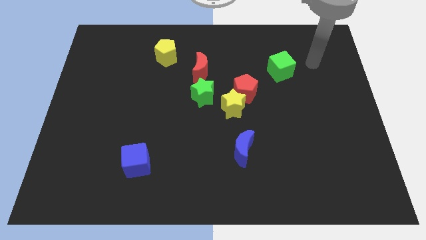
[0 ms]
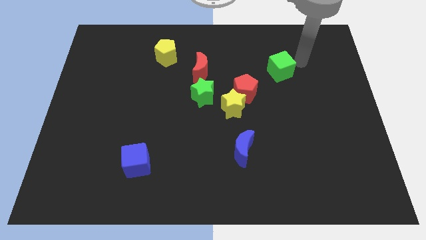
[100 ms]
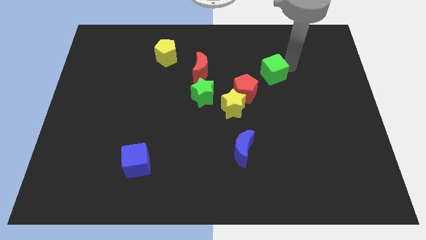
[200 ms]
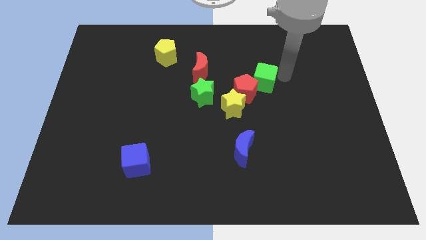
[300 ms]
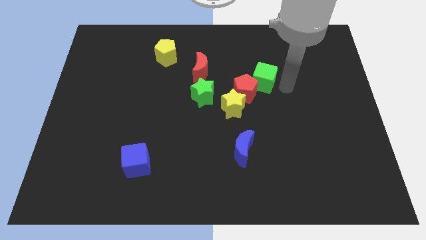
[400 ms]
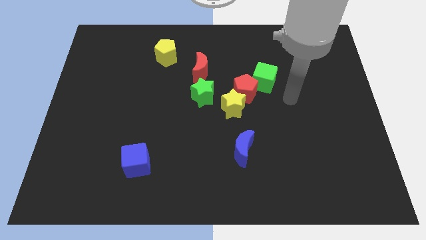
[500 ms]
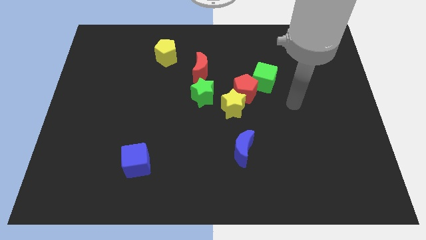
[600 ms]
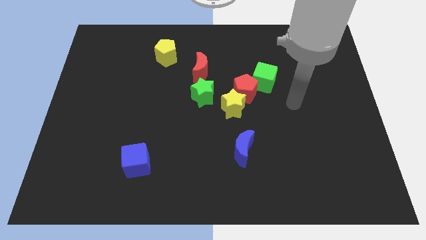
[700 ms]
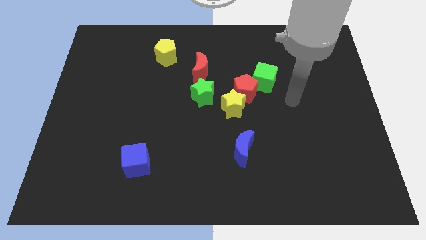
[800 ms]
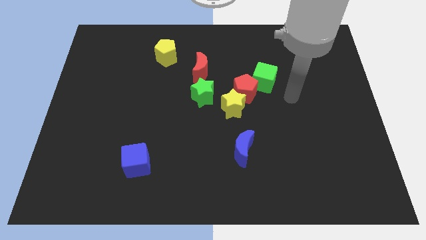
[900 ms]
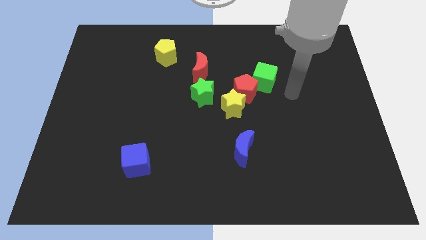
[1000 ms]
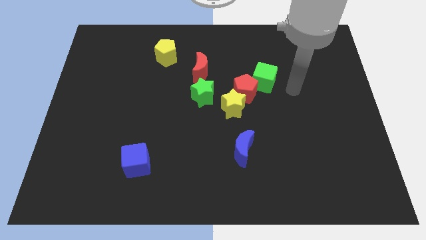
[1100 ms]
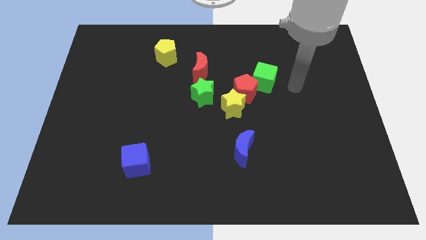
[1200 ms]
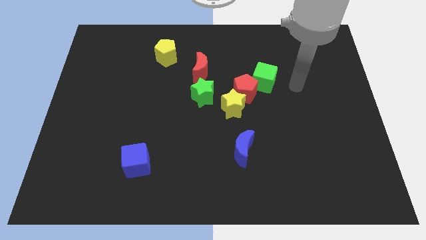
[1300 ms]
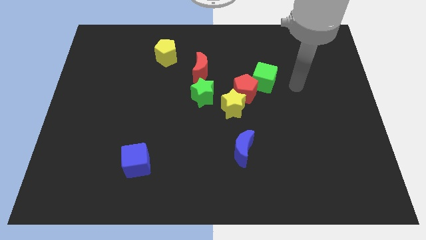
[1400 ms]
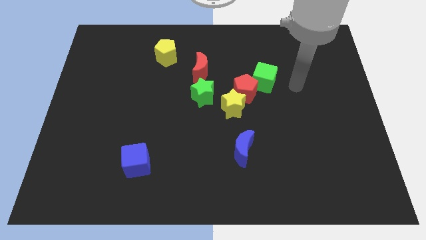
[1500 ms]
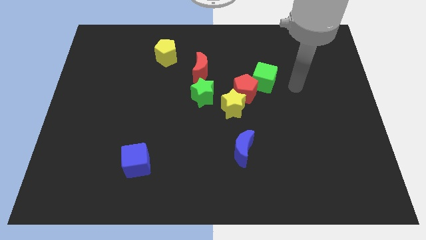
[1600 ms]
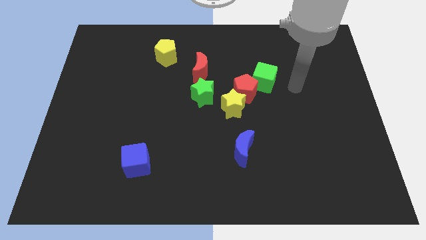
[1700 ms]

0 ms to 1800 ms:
push the green cube top right diagonal to the red pentagon

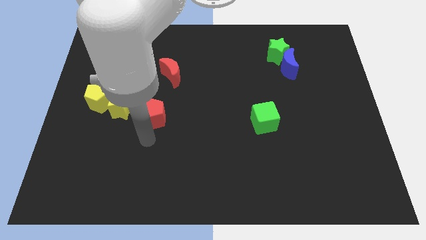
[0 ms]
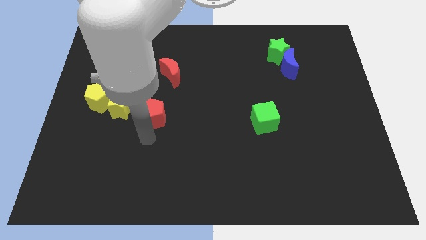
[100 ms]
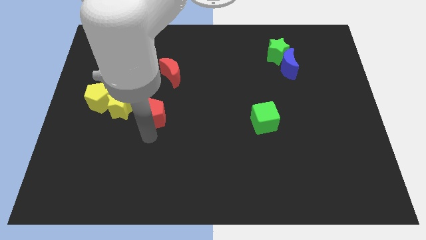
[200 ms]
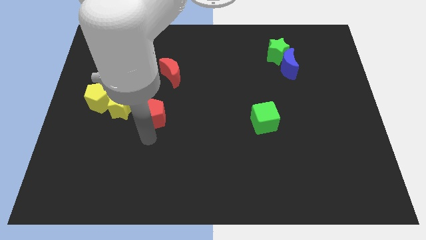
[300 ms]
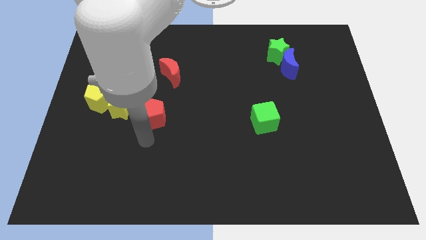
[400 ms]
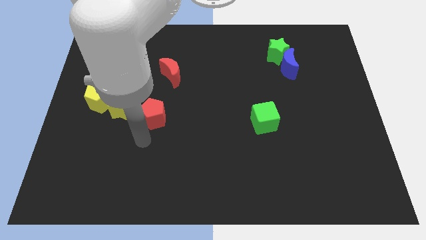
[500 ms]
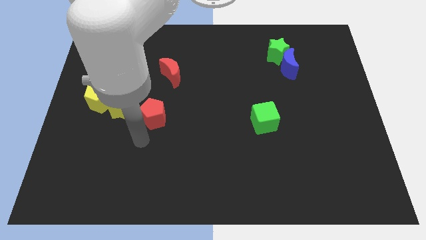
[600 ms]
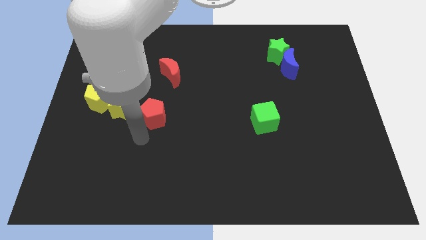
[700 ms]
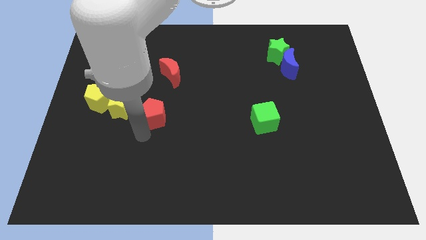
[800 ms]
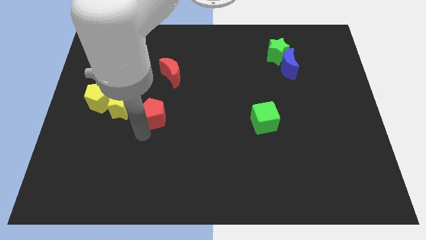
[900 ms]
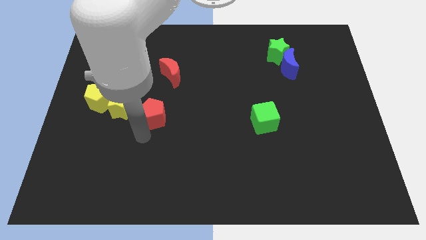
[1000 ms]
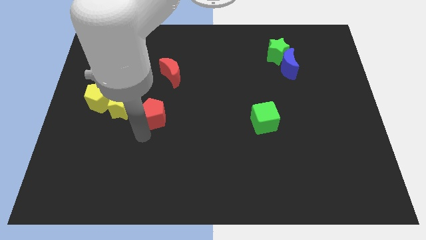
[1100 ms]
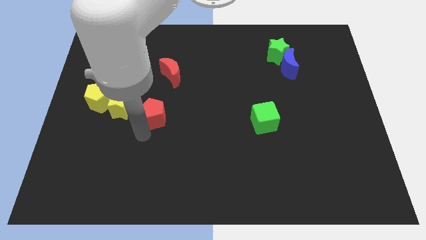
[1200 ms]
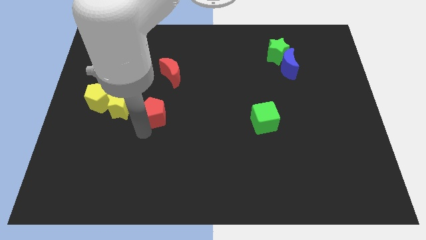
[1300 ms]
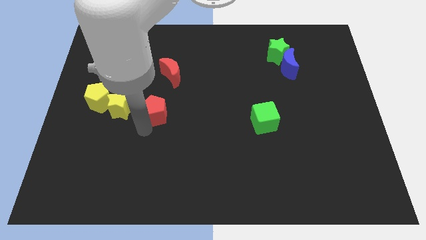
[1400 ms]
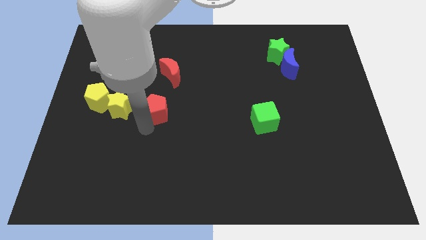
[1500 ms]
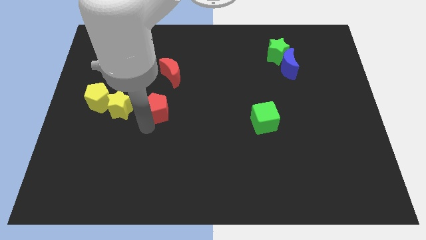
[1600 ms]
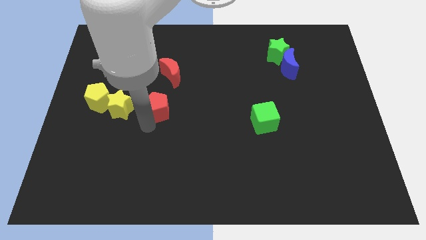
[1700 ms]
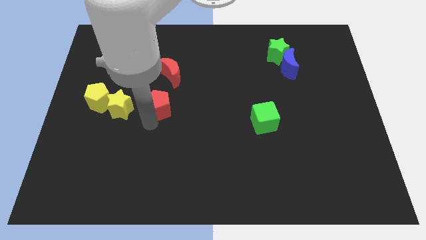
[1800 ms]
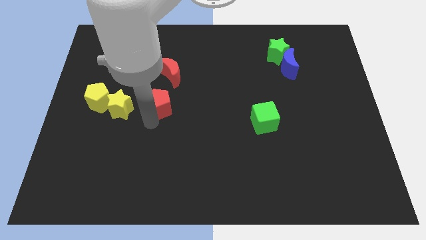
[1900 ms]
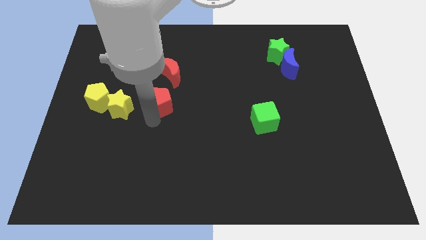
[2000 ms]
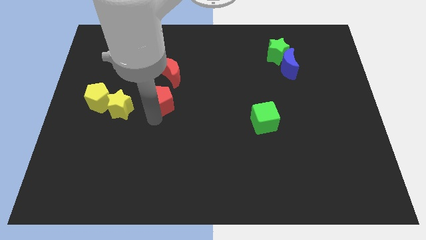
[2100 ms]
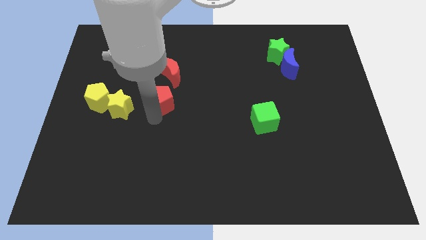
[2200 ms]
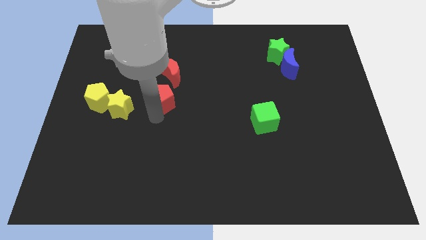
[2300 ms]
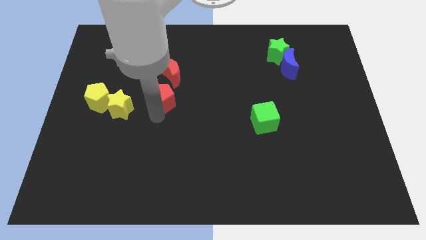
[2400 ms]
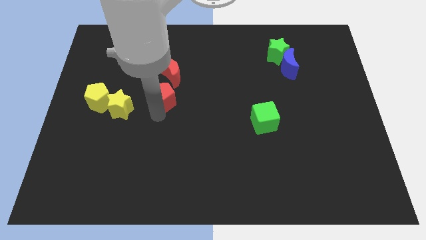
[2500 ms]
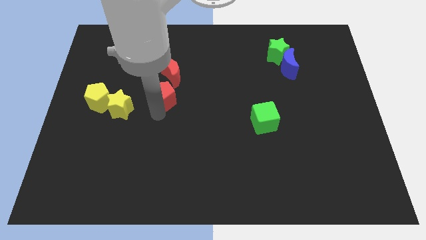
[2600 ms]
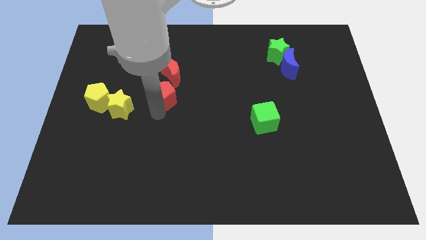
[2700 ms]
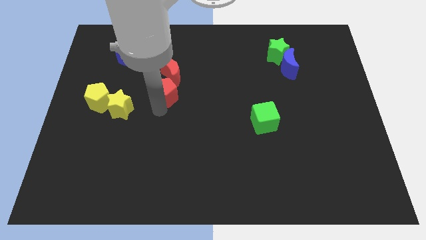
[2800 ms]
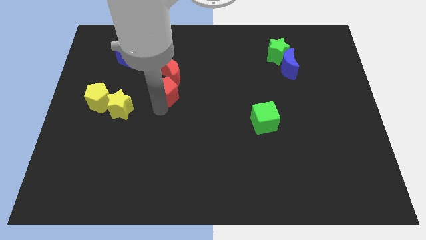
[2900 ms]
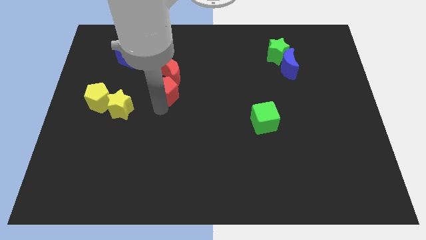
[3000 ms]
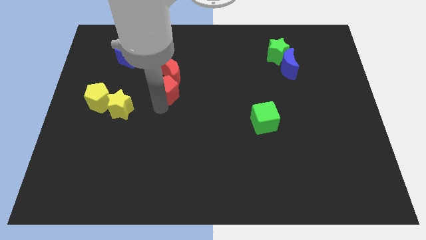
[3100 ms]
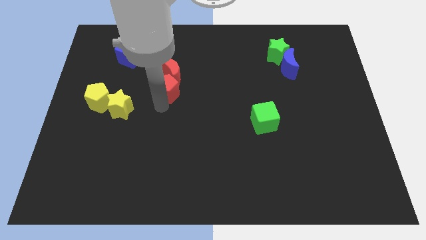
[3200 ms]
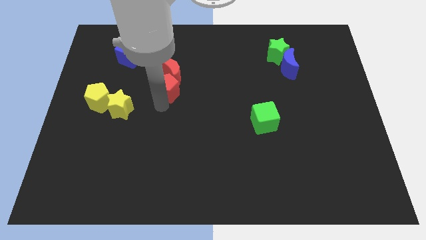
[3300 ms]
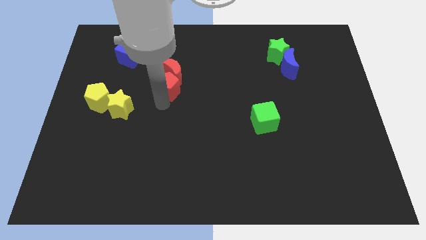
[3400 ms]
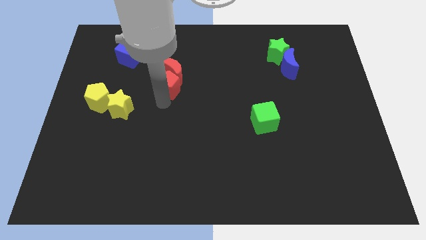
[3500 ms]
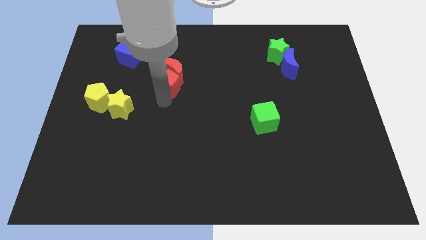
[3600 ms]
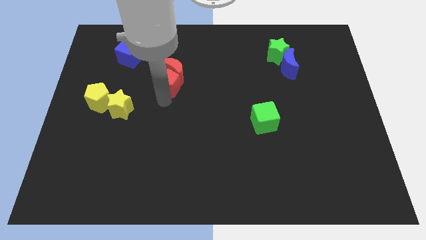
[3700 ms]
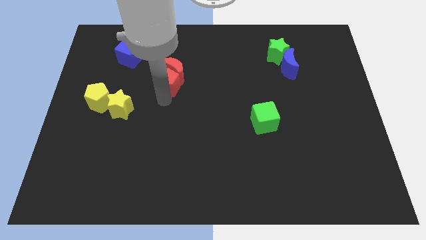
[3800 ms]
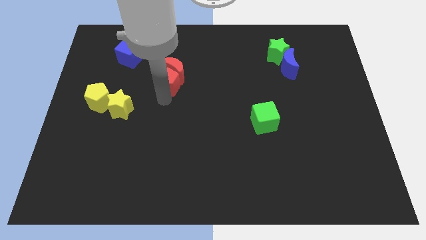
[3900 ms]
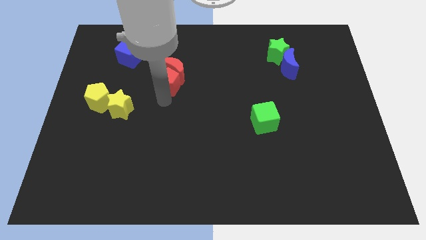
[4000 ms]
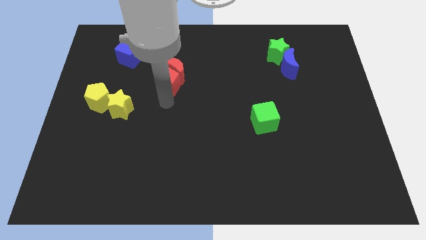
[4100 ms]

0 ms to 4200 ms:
move the red pentagon into the bottom side of the red crescent

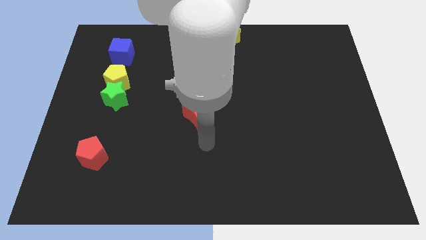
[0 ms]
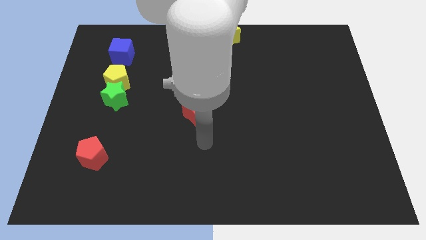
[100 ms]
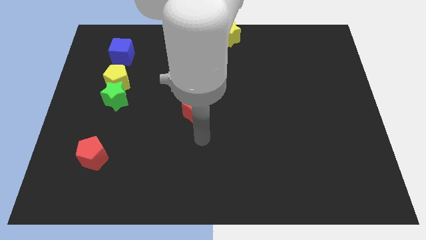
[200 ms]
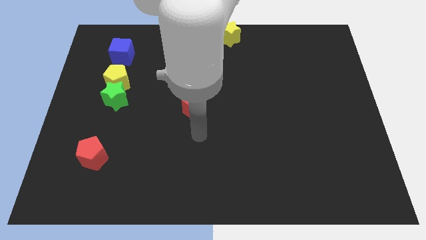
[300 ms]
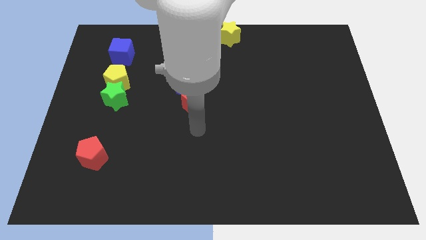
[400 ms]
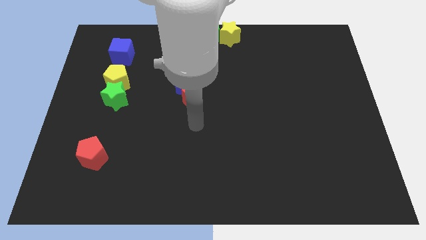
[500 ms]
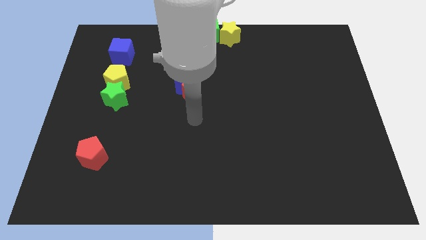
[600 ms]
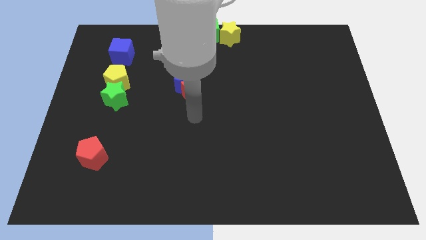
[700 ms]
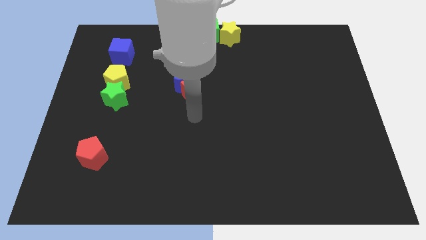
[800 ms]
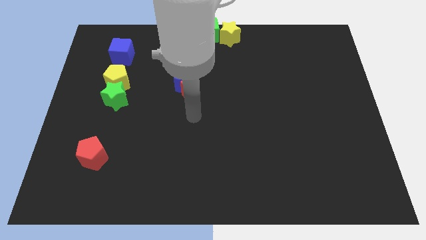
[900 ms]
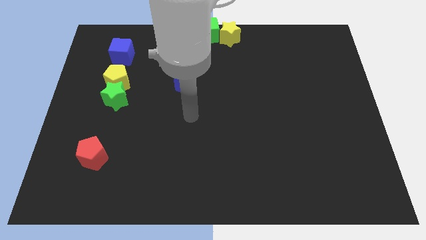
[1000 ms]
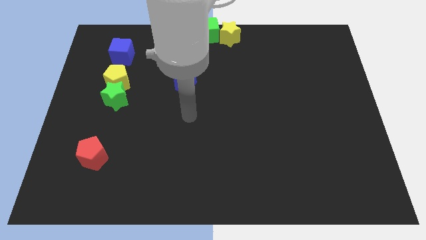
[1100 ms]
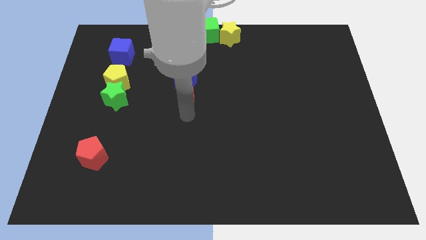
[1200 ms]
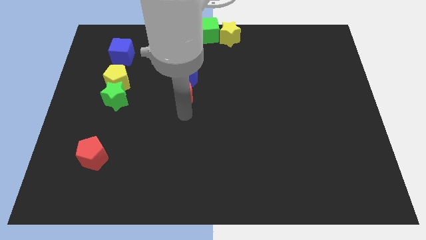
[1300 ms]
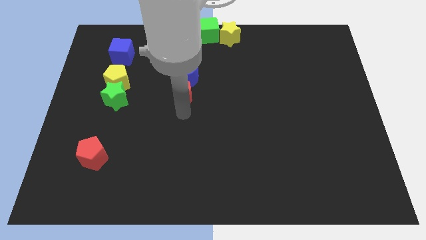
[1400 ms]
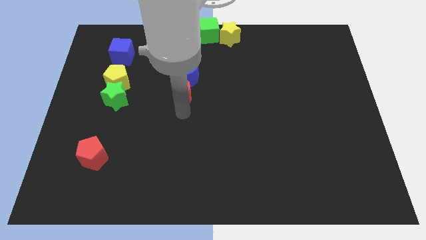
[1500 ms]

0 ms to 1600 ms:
move the red crescent slightly upwards

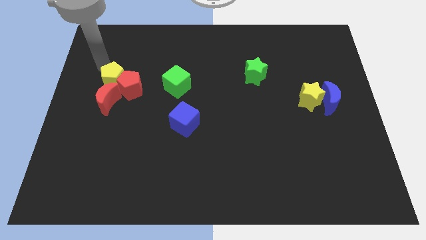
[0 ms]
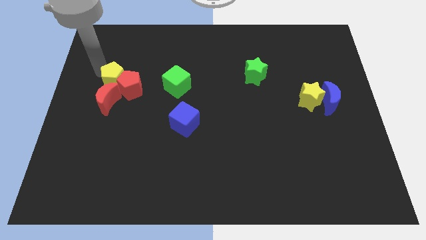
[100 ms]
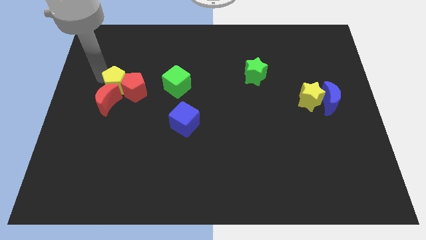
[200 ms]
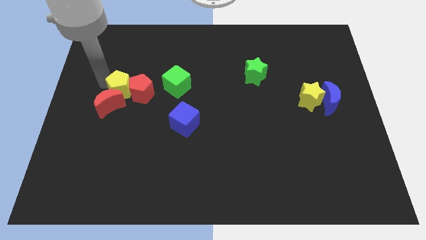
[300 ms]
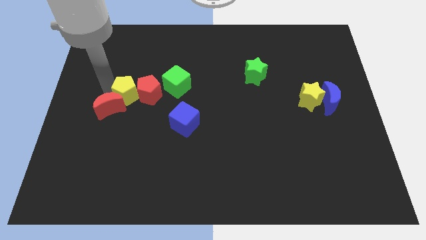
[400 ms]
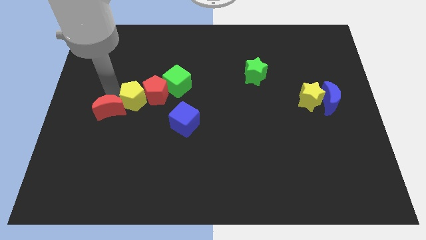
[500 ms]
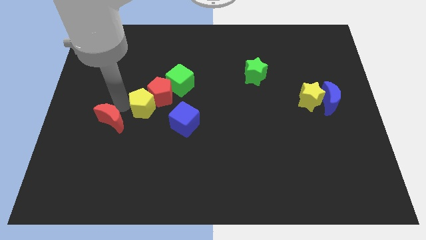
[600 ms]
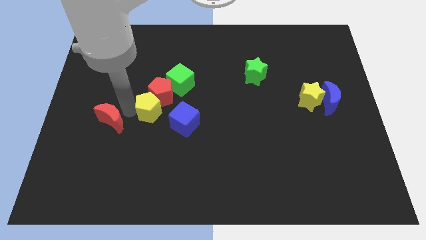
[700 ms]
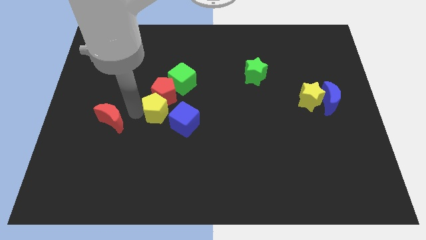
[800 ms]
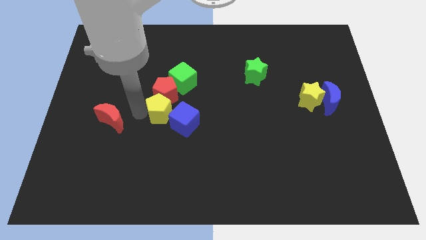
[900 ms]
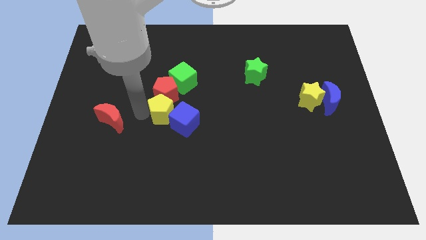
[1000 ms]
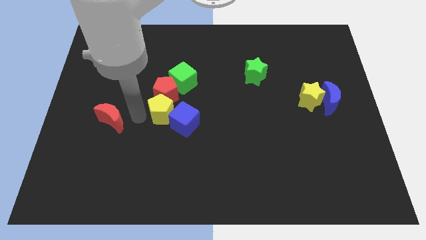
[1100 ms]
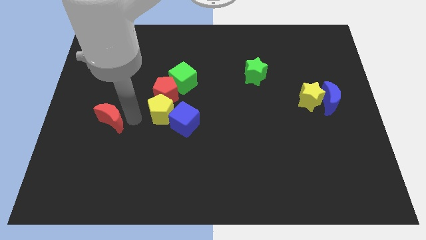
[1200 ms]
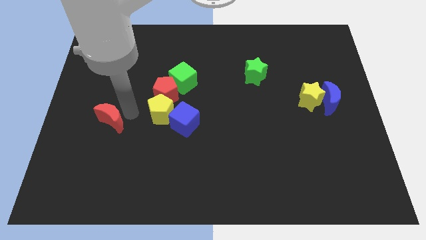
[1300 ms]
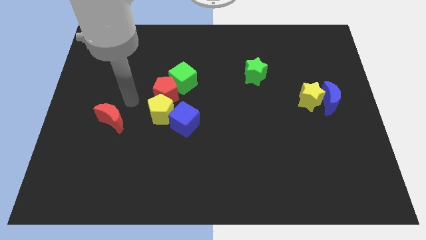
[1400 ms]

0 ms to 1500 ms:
push the yellow pentagon to the top left of the blue cube
